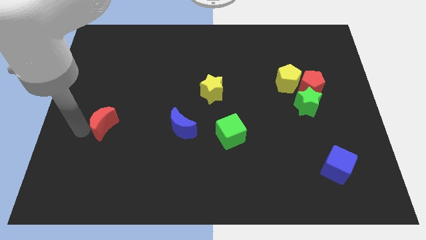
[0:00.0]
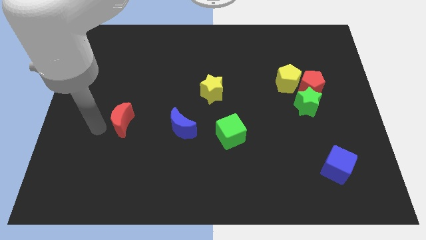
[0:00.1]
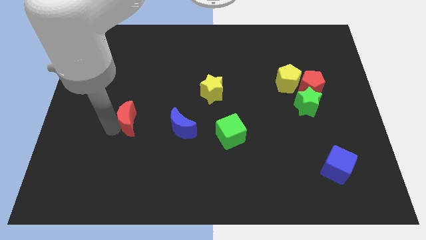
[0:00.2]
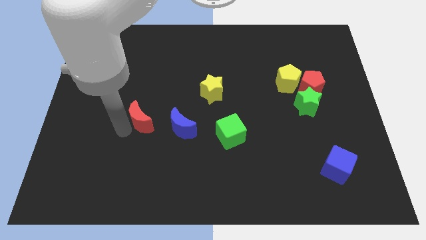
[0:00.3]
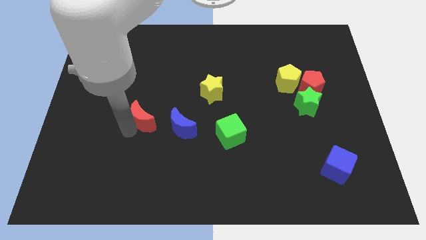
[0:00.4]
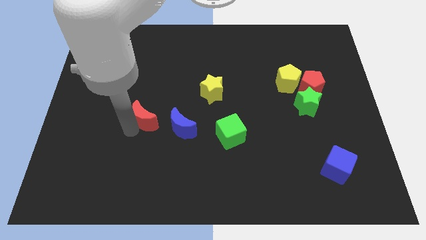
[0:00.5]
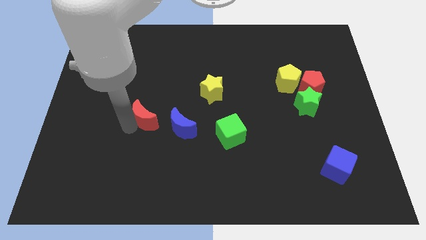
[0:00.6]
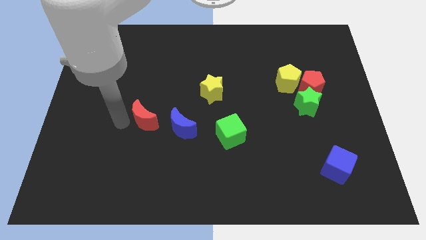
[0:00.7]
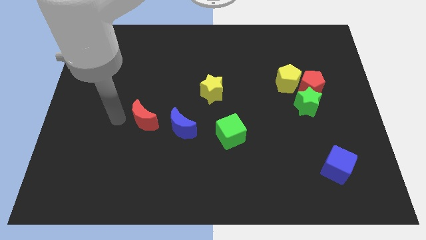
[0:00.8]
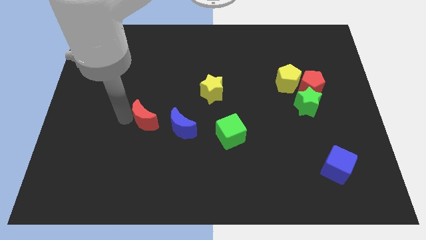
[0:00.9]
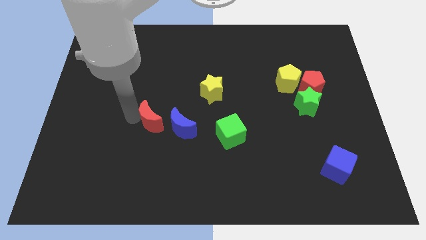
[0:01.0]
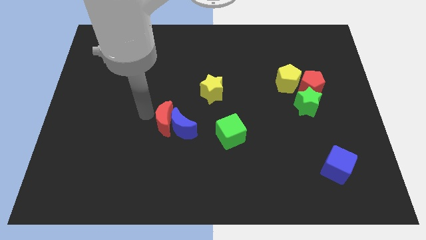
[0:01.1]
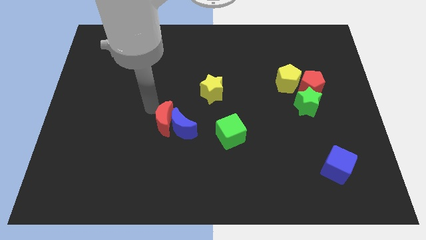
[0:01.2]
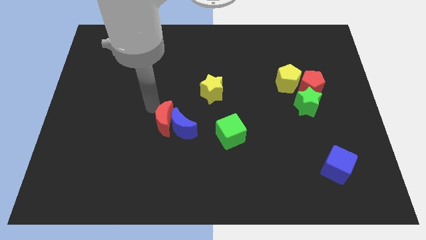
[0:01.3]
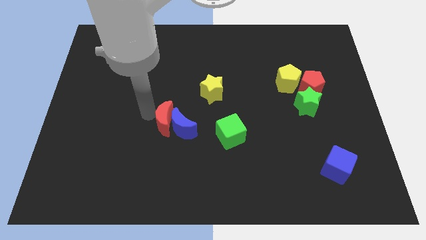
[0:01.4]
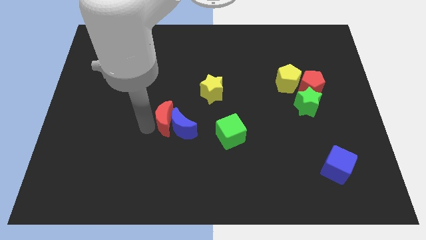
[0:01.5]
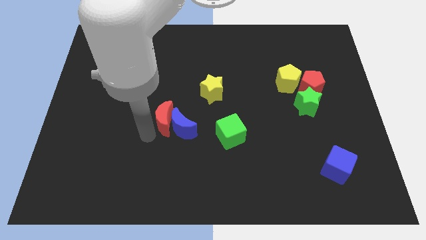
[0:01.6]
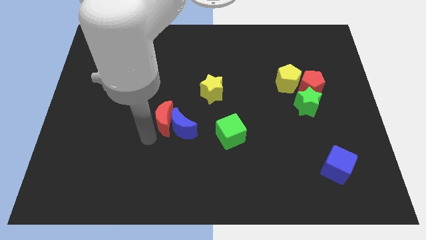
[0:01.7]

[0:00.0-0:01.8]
move the red moon into the blue moon

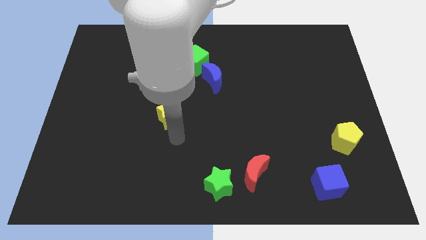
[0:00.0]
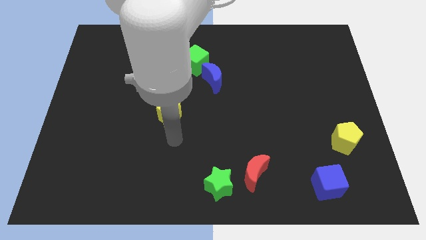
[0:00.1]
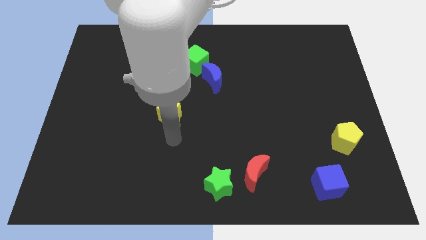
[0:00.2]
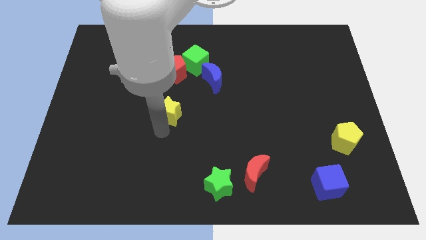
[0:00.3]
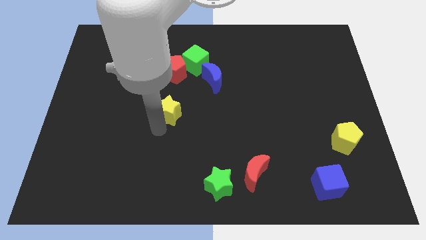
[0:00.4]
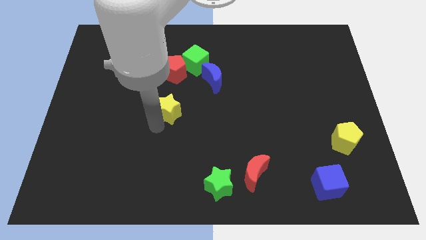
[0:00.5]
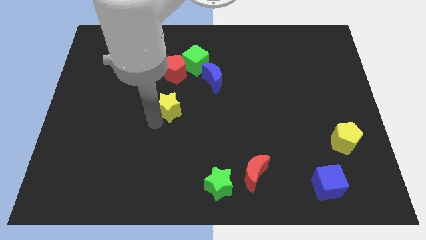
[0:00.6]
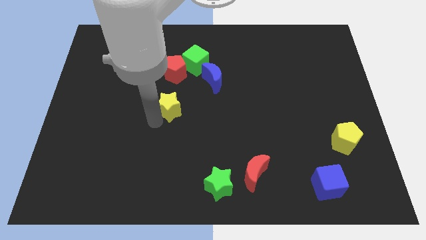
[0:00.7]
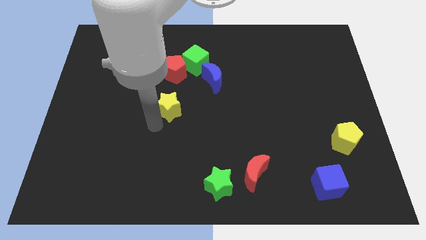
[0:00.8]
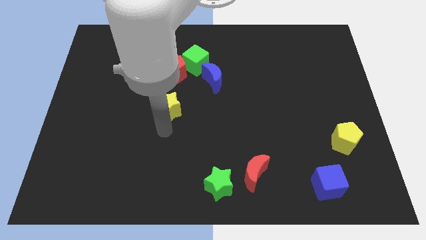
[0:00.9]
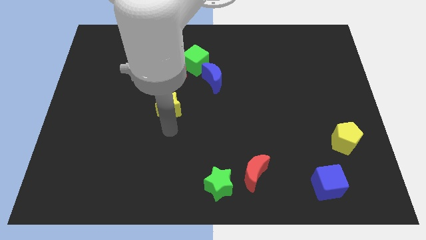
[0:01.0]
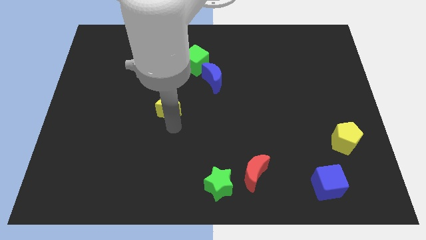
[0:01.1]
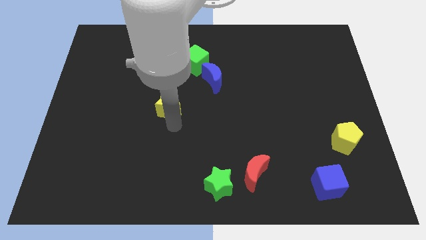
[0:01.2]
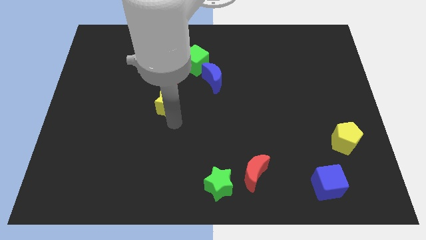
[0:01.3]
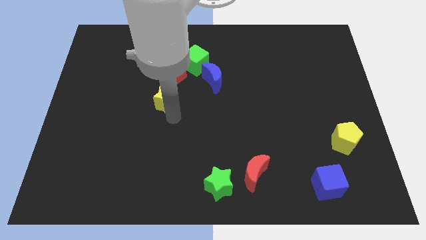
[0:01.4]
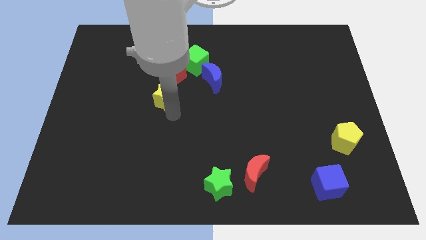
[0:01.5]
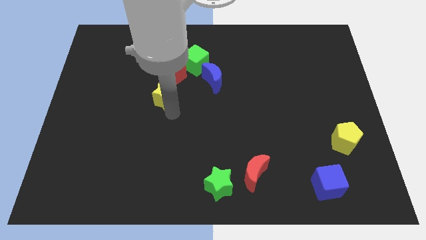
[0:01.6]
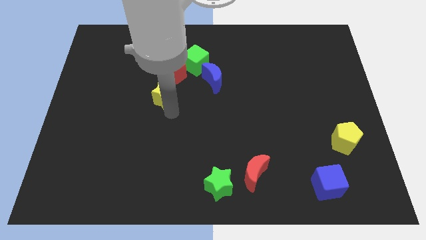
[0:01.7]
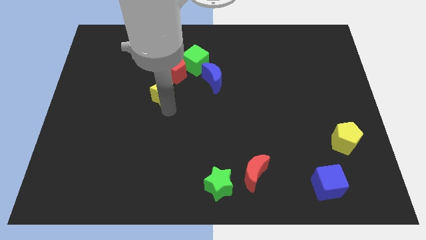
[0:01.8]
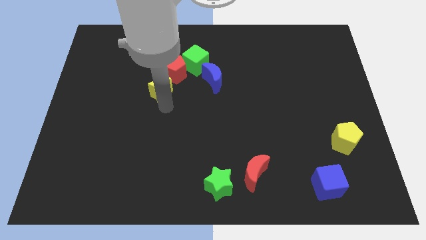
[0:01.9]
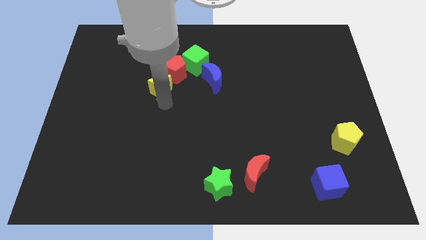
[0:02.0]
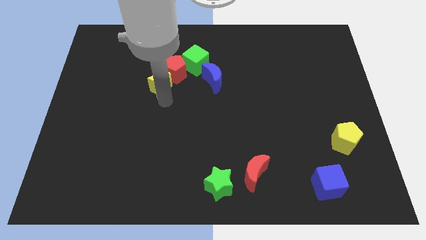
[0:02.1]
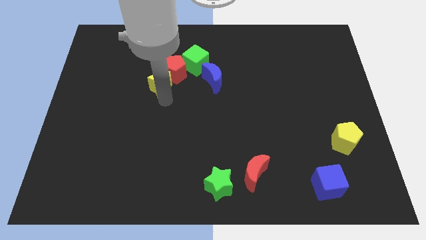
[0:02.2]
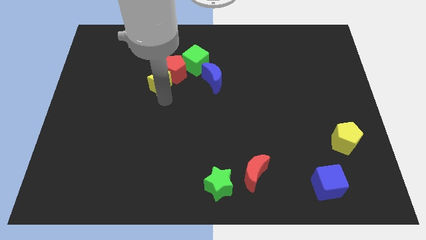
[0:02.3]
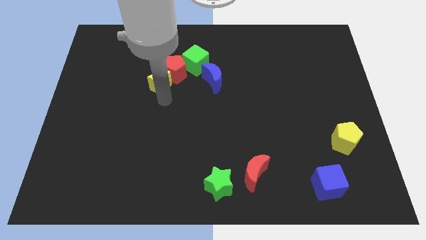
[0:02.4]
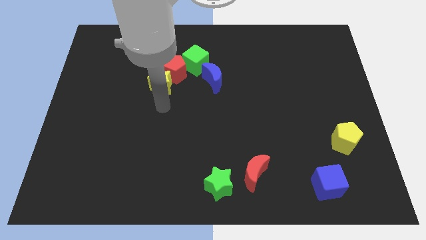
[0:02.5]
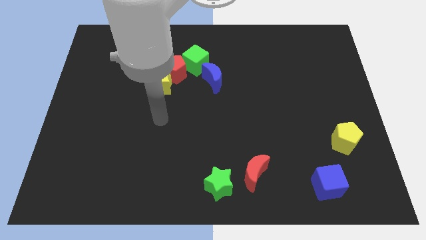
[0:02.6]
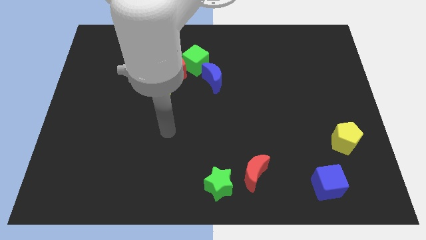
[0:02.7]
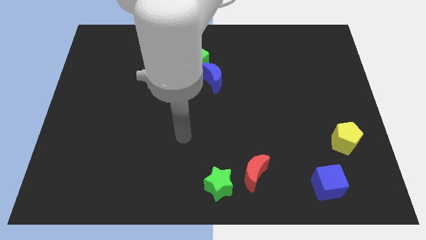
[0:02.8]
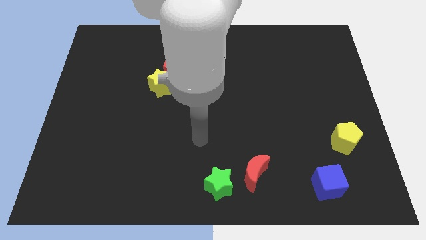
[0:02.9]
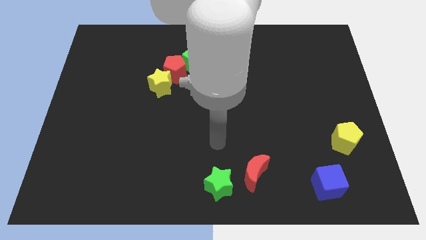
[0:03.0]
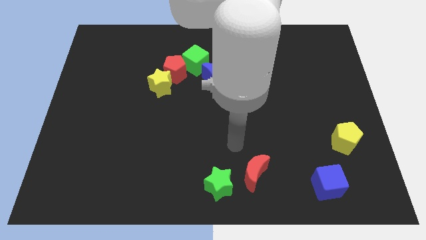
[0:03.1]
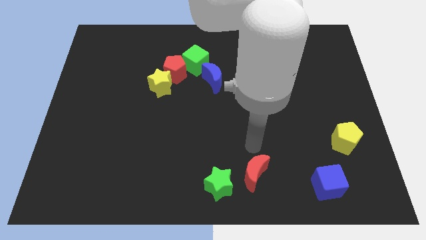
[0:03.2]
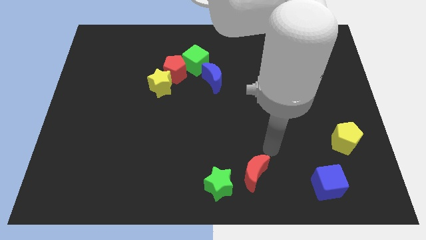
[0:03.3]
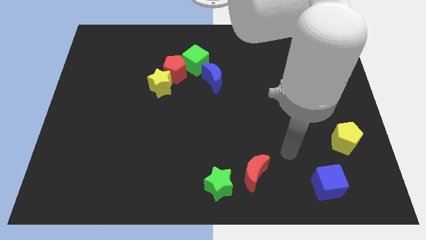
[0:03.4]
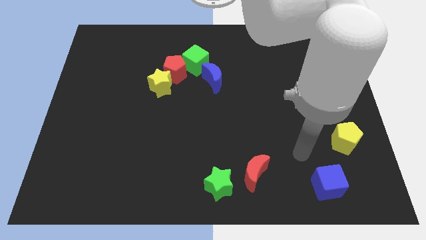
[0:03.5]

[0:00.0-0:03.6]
push yellow star in to red pentagon

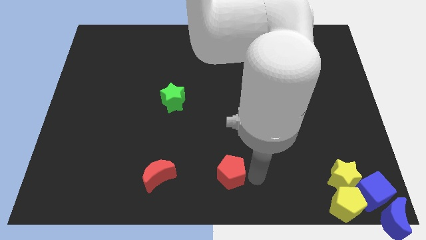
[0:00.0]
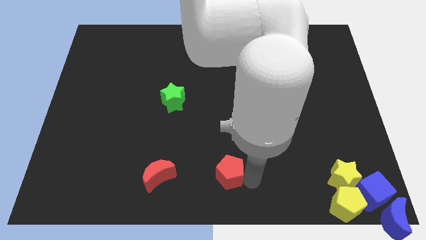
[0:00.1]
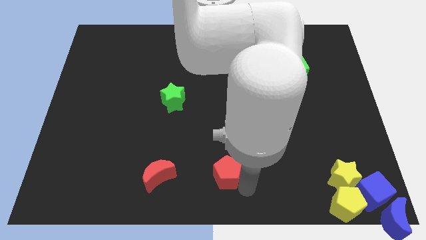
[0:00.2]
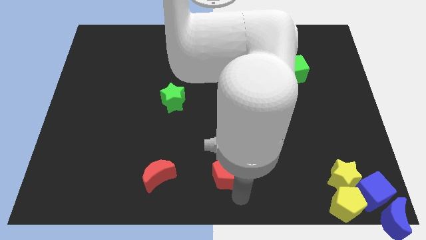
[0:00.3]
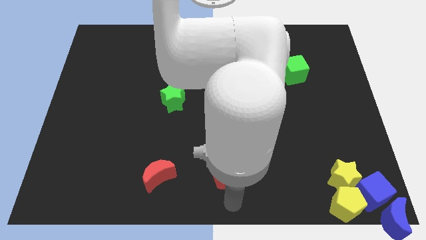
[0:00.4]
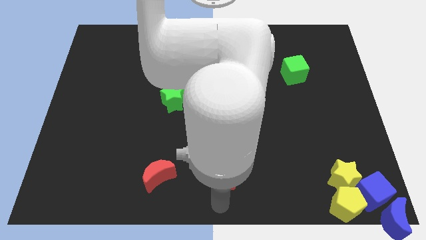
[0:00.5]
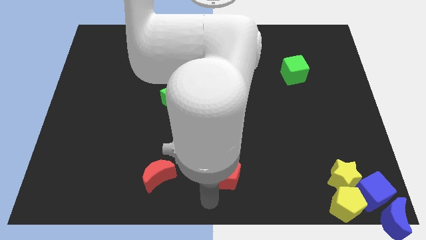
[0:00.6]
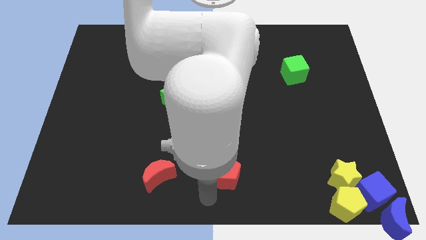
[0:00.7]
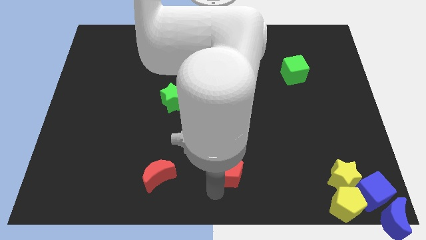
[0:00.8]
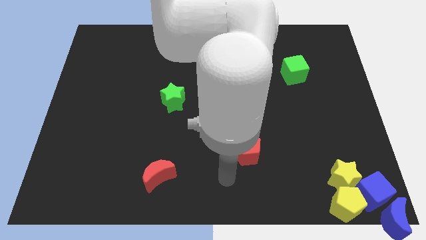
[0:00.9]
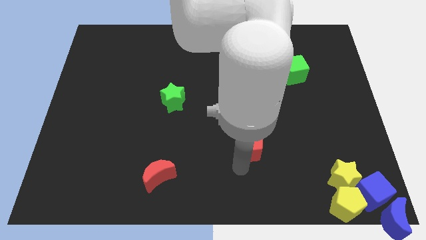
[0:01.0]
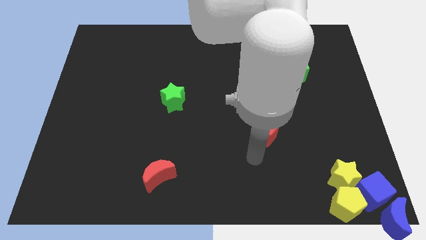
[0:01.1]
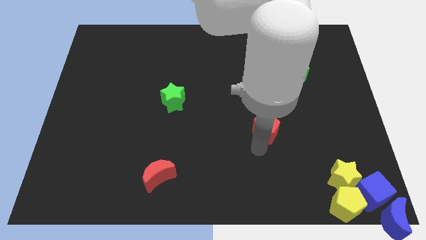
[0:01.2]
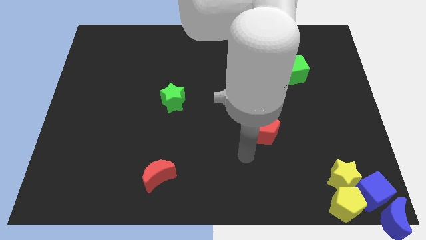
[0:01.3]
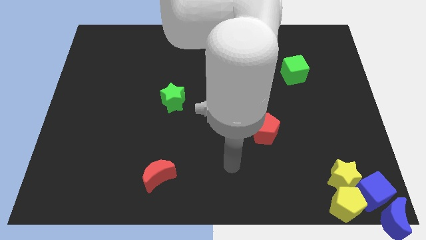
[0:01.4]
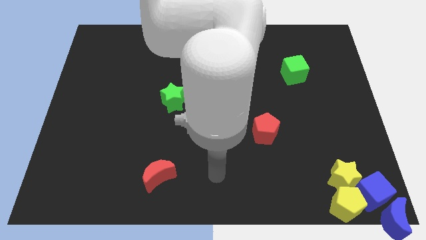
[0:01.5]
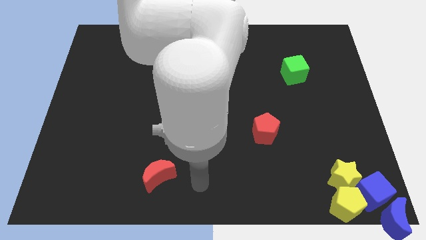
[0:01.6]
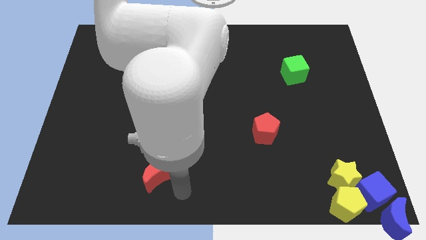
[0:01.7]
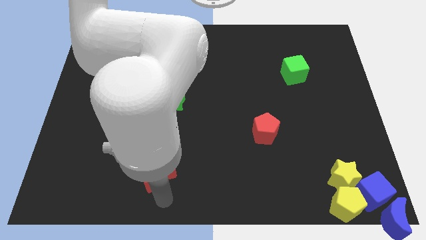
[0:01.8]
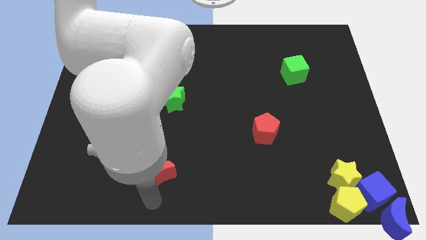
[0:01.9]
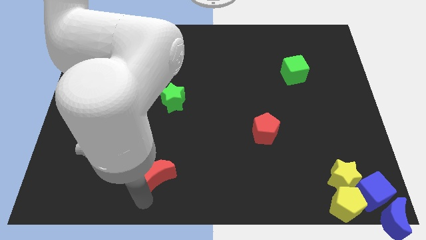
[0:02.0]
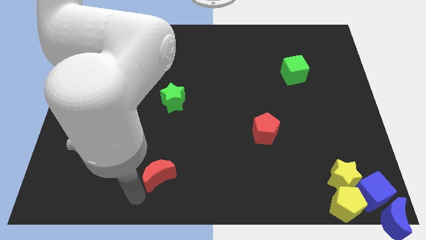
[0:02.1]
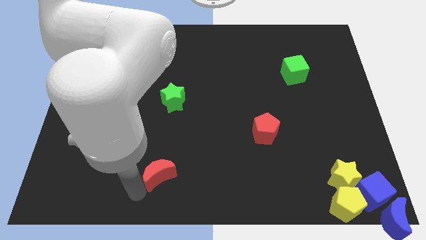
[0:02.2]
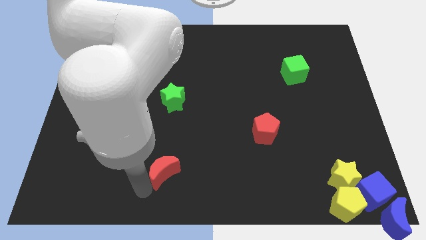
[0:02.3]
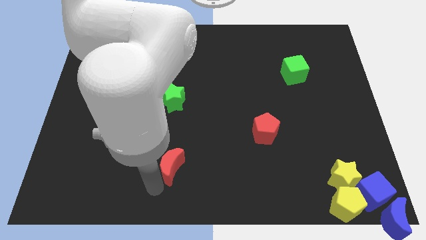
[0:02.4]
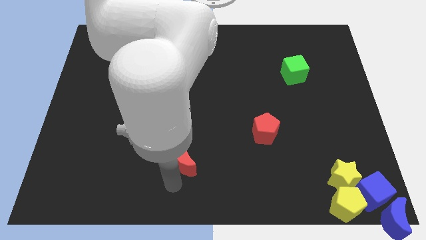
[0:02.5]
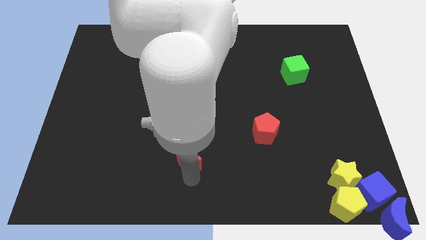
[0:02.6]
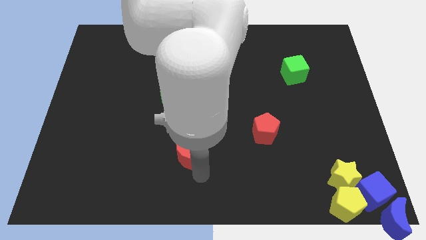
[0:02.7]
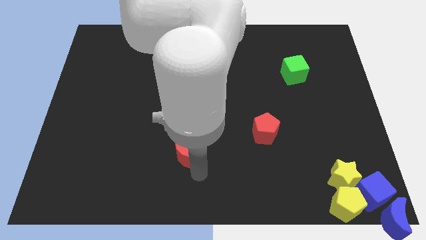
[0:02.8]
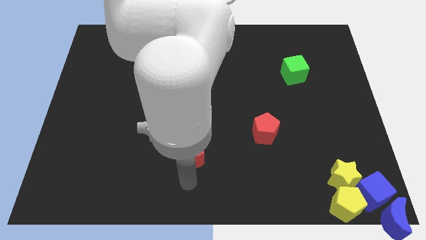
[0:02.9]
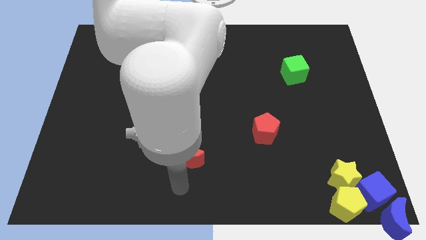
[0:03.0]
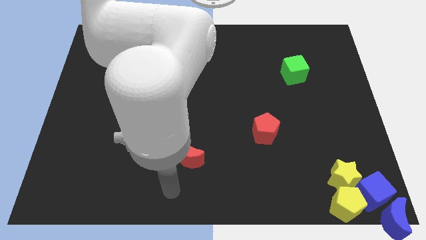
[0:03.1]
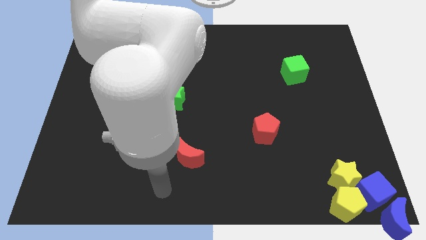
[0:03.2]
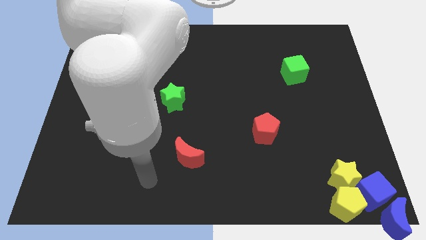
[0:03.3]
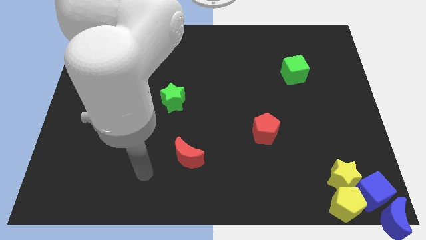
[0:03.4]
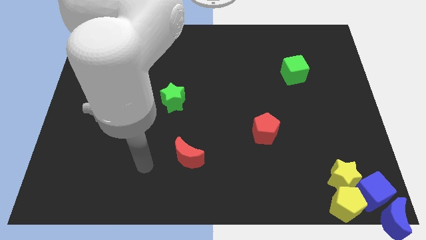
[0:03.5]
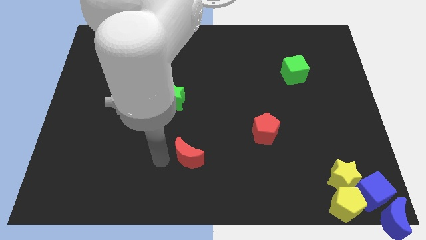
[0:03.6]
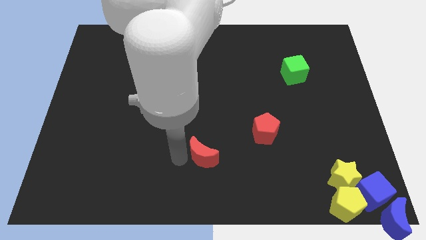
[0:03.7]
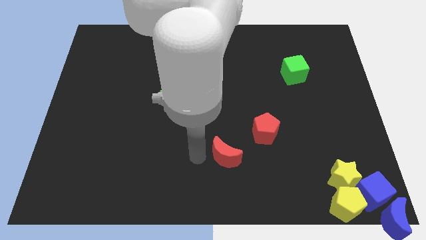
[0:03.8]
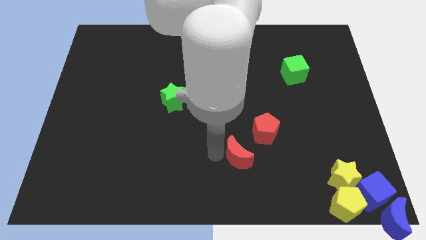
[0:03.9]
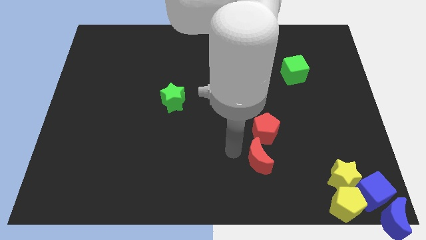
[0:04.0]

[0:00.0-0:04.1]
place the red pentagon and the red moon to the bottom center
